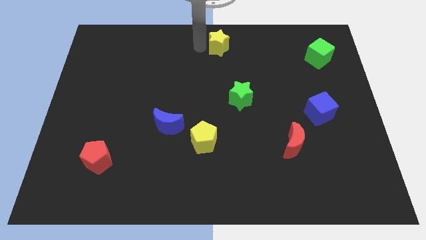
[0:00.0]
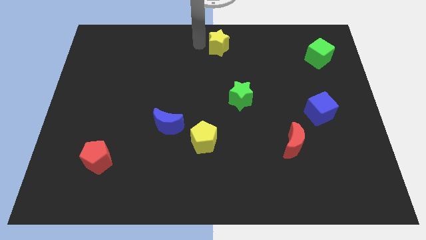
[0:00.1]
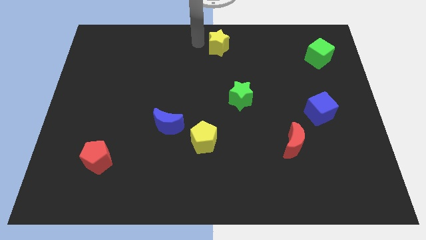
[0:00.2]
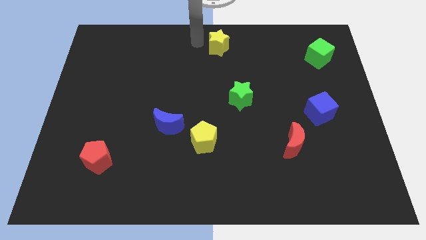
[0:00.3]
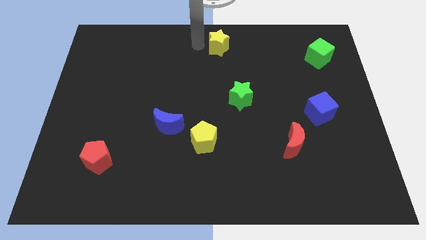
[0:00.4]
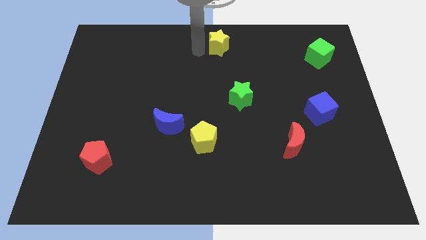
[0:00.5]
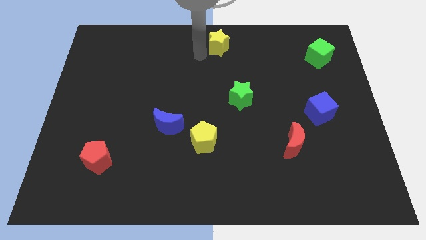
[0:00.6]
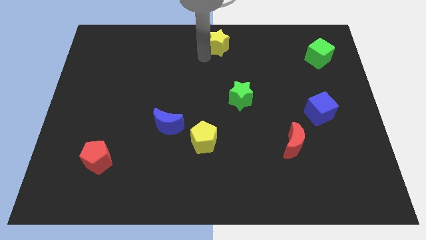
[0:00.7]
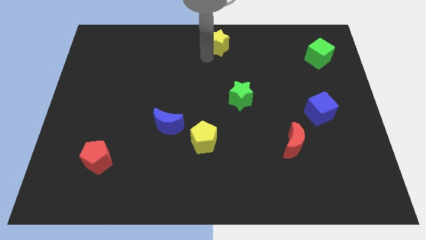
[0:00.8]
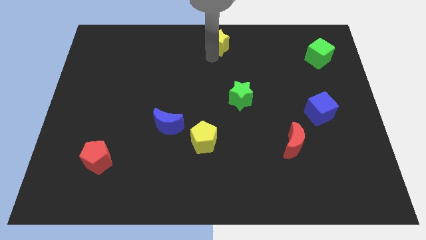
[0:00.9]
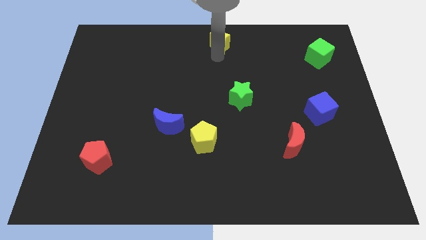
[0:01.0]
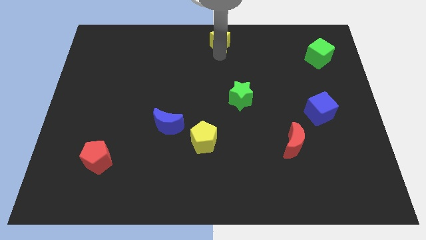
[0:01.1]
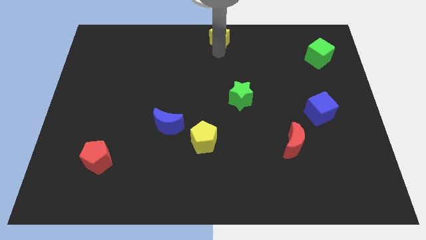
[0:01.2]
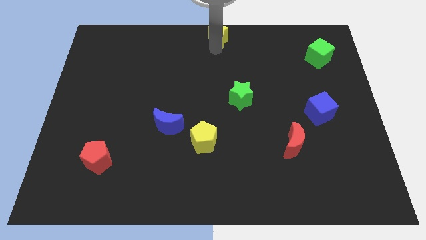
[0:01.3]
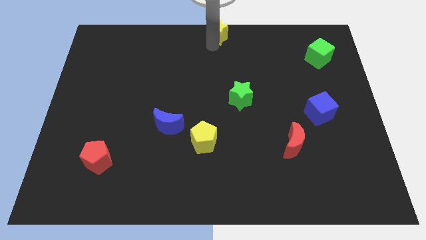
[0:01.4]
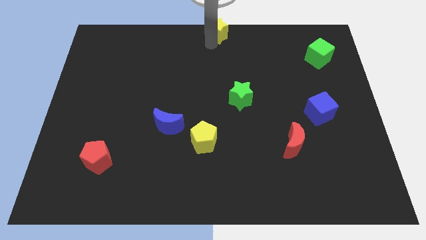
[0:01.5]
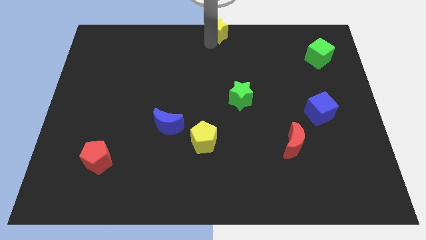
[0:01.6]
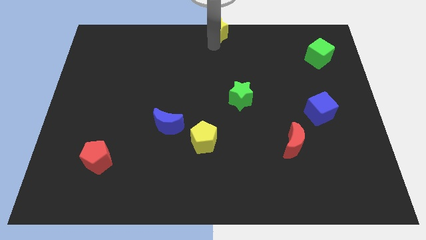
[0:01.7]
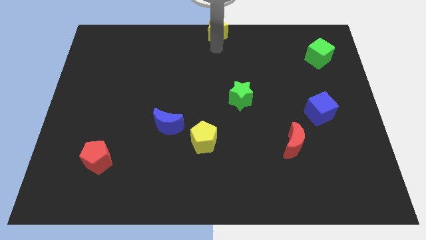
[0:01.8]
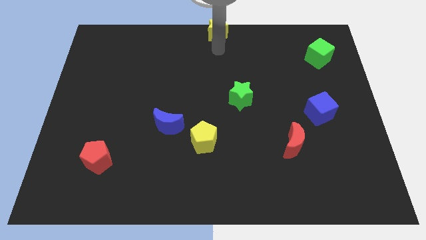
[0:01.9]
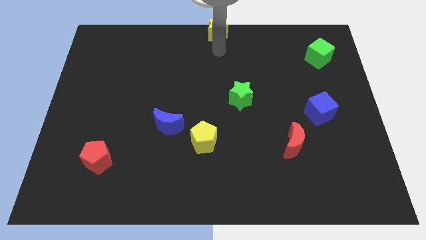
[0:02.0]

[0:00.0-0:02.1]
place the yellow star at the top center of the board

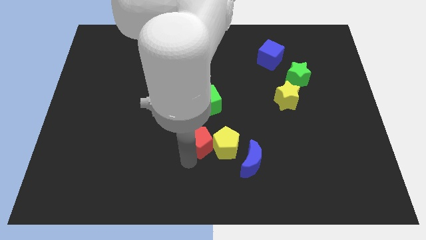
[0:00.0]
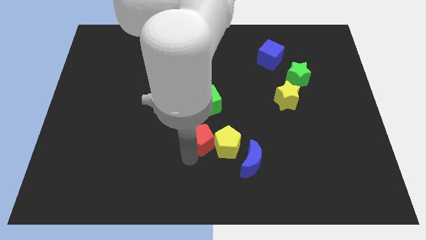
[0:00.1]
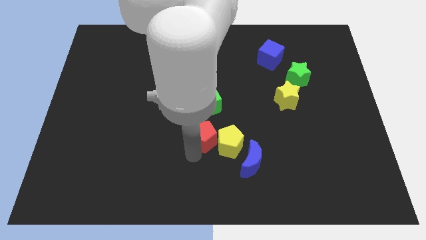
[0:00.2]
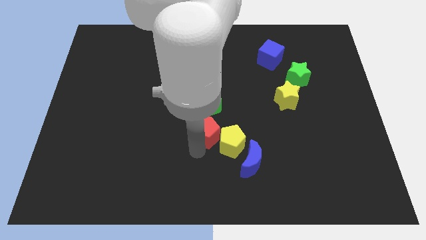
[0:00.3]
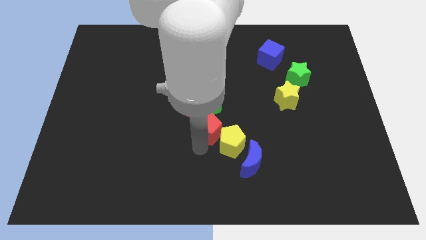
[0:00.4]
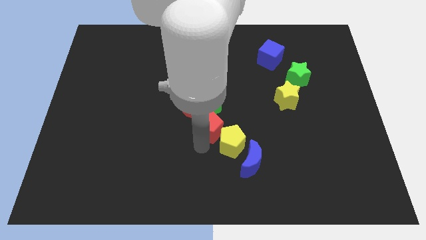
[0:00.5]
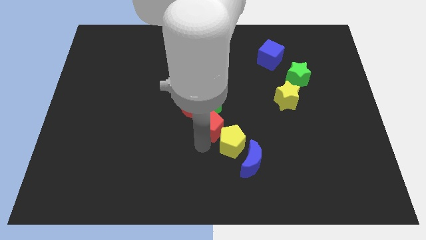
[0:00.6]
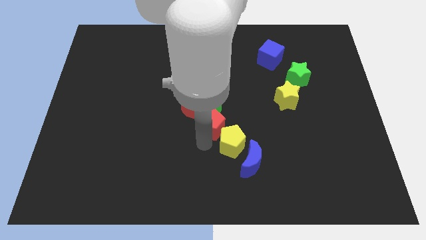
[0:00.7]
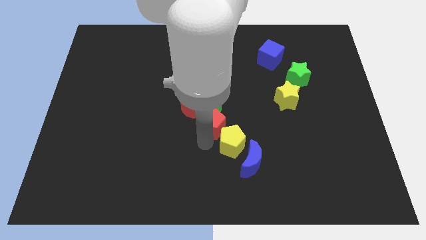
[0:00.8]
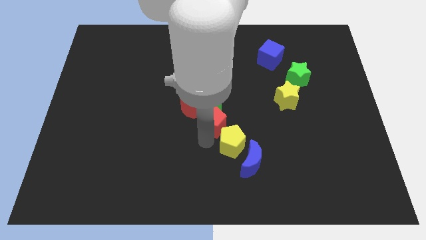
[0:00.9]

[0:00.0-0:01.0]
move the red pentagon below the green cube

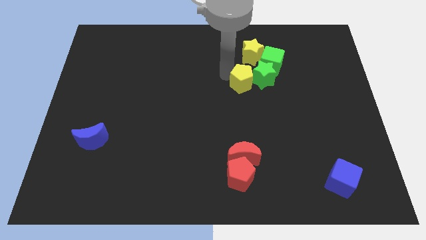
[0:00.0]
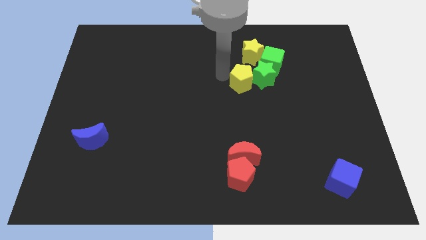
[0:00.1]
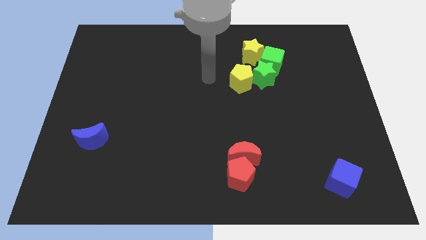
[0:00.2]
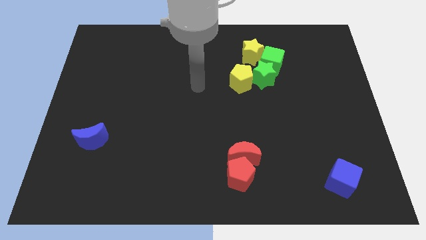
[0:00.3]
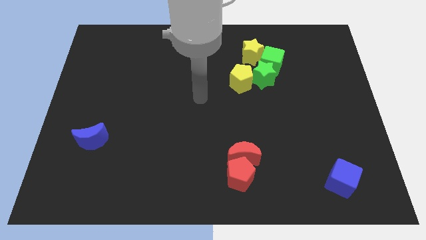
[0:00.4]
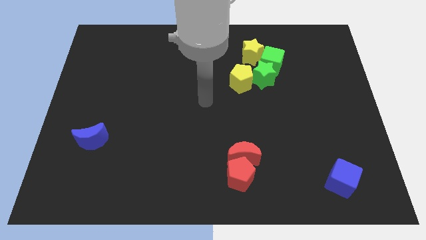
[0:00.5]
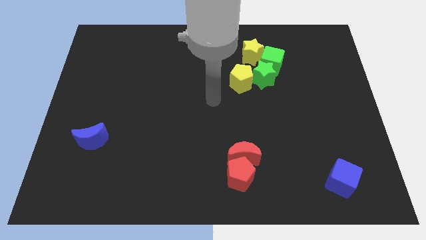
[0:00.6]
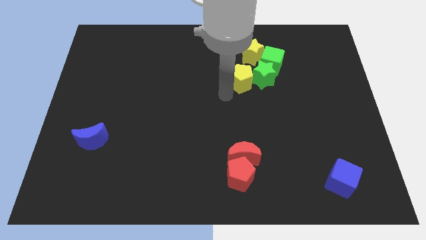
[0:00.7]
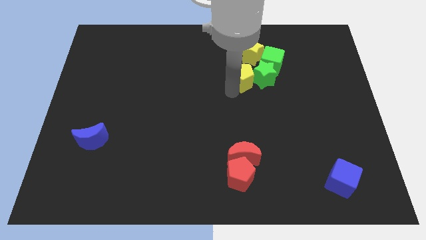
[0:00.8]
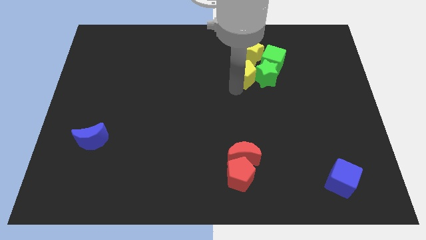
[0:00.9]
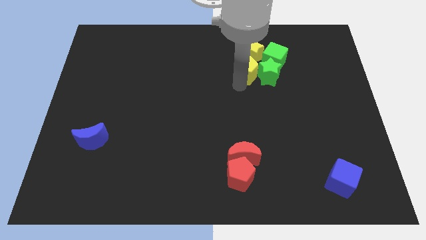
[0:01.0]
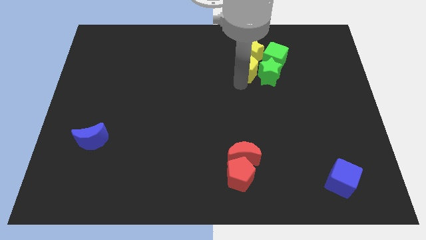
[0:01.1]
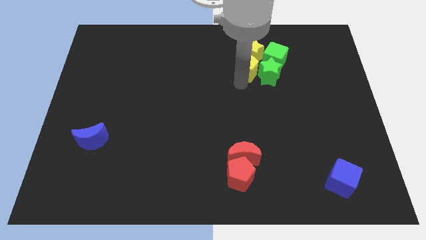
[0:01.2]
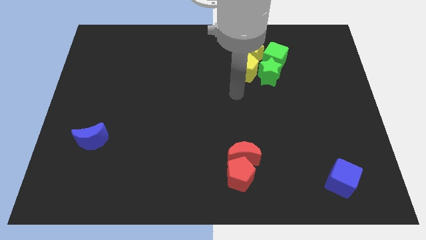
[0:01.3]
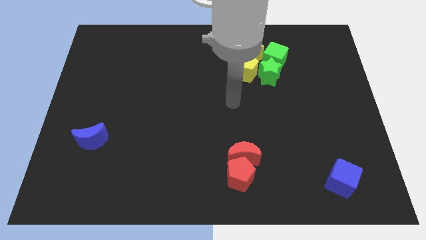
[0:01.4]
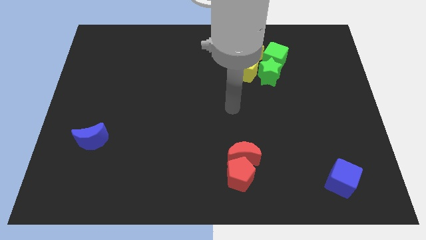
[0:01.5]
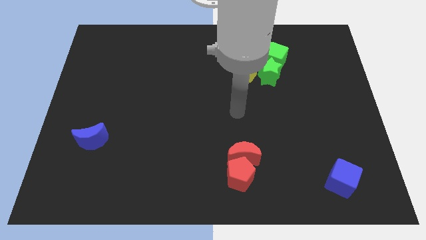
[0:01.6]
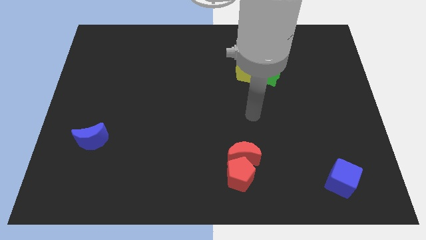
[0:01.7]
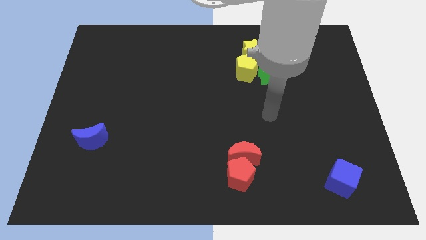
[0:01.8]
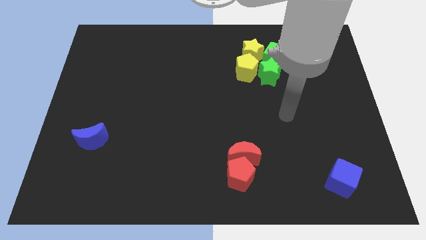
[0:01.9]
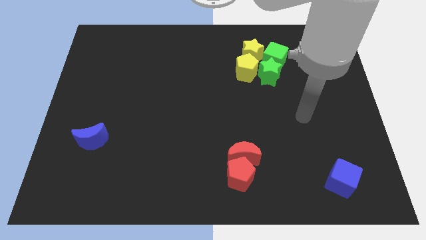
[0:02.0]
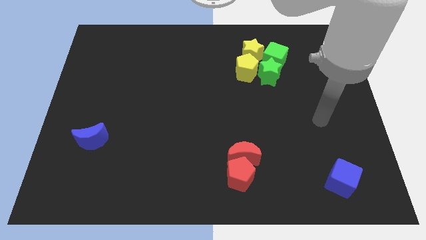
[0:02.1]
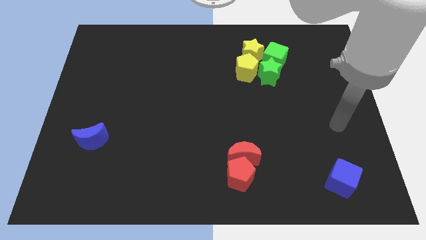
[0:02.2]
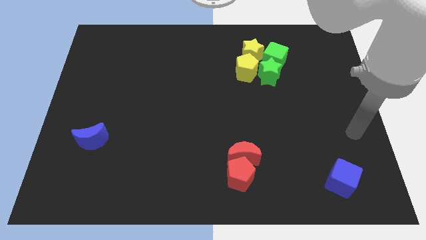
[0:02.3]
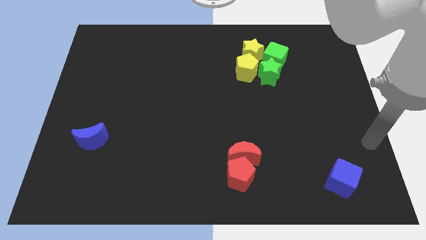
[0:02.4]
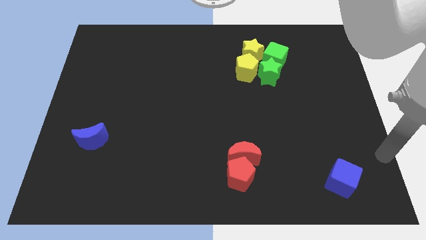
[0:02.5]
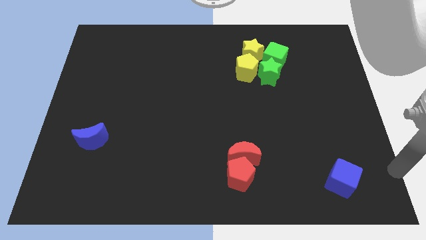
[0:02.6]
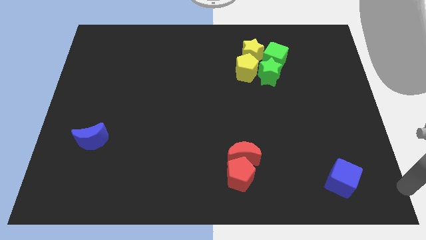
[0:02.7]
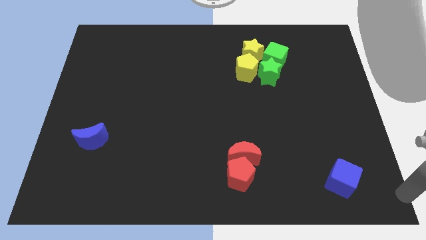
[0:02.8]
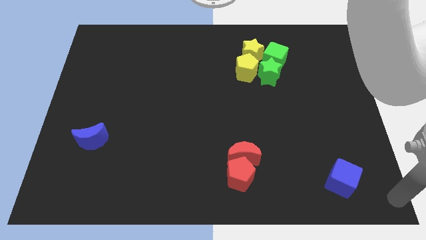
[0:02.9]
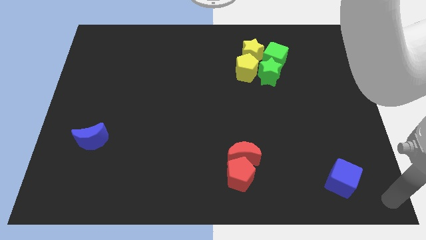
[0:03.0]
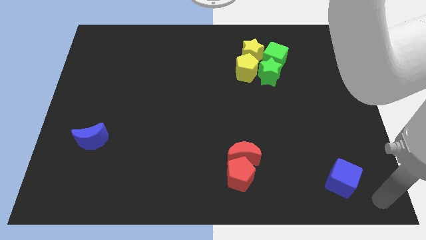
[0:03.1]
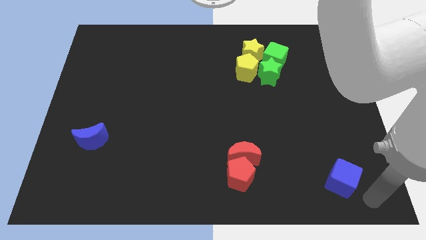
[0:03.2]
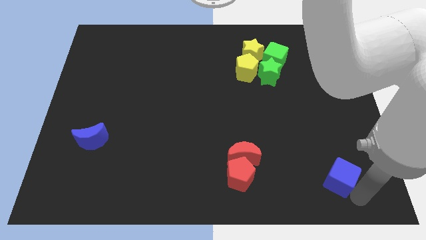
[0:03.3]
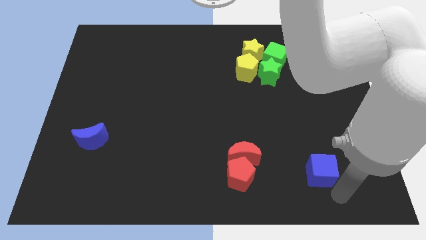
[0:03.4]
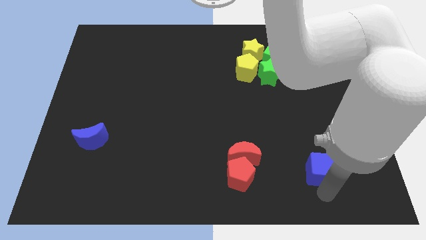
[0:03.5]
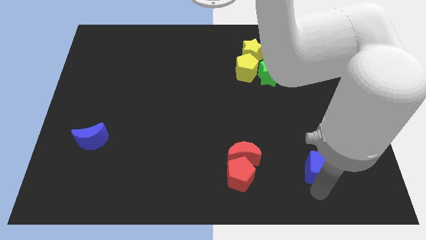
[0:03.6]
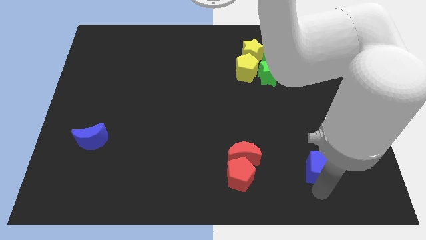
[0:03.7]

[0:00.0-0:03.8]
move your arm to the blue cube

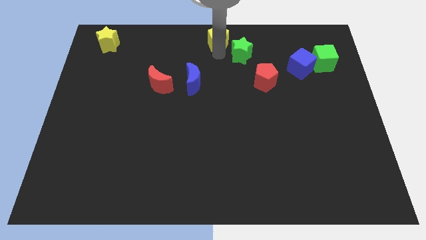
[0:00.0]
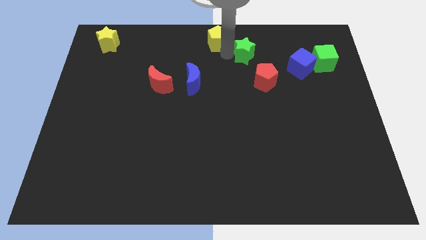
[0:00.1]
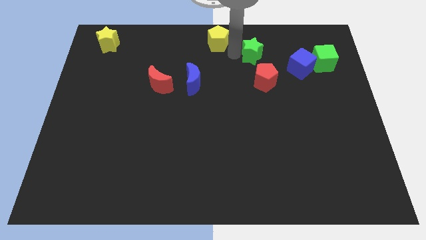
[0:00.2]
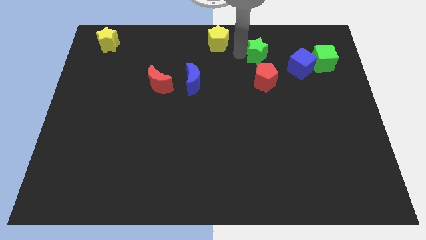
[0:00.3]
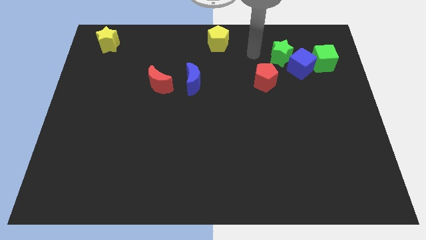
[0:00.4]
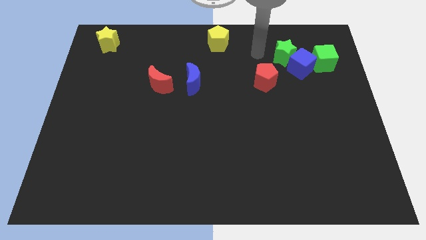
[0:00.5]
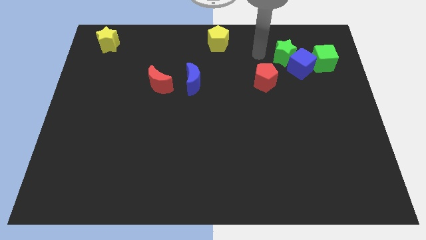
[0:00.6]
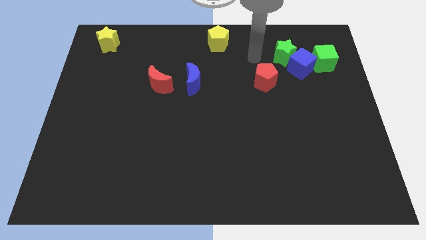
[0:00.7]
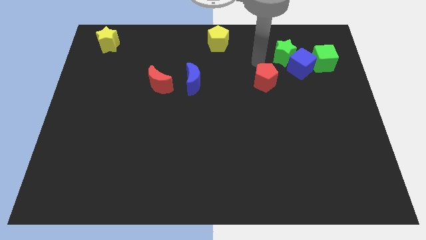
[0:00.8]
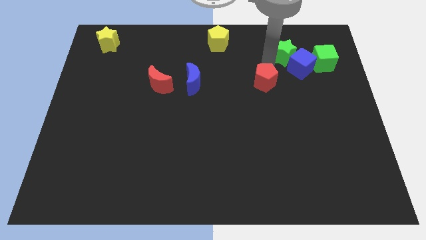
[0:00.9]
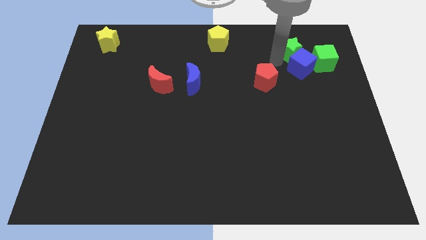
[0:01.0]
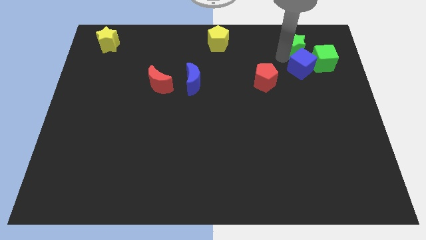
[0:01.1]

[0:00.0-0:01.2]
separate the green star from the yellow pentagon

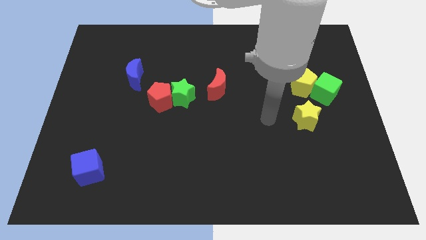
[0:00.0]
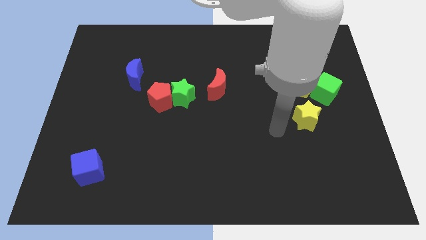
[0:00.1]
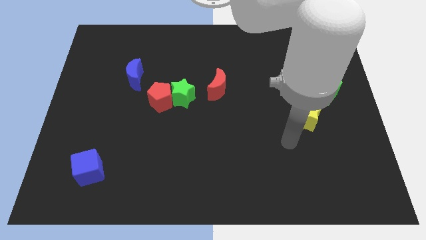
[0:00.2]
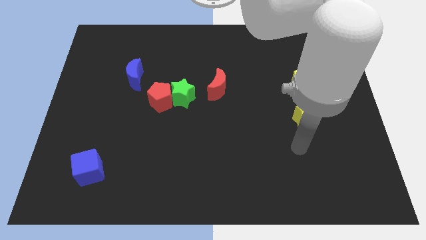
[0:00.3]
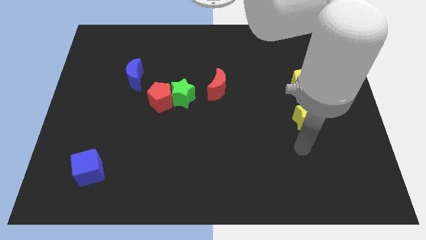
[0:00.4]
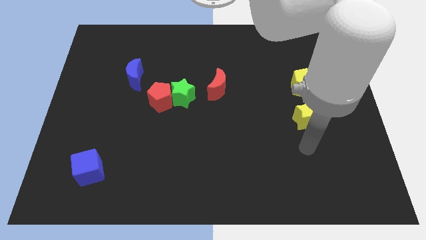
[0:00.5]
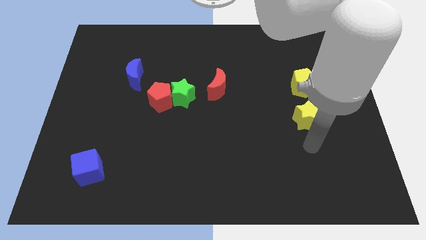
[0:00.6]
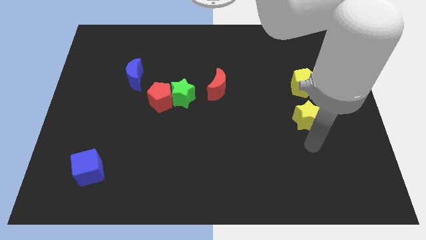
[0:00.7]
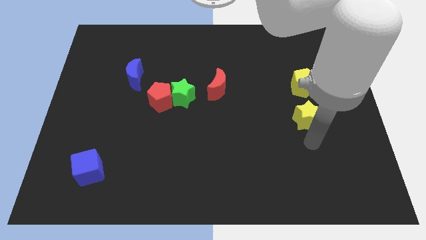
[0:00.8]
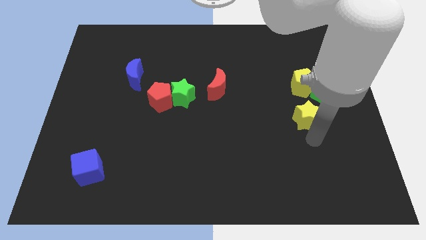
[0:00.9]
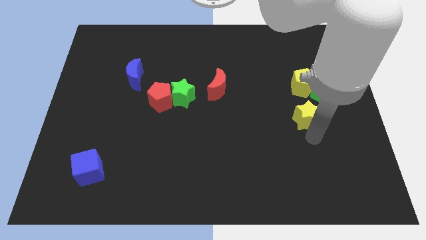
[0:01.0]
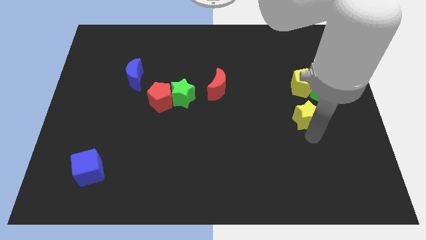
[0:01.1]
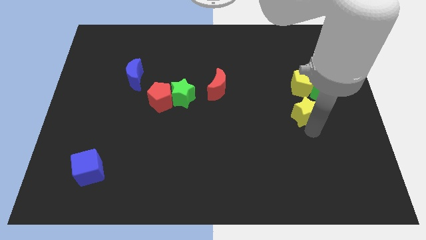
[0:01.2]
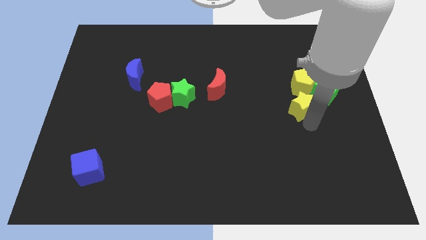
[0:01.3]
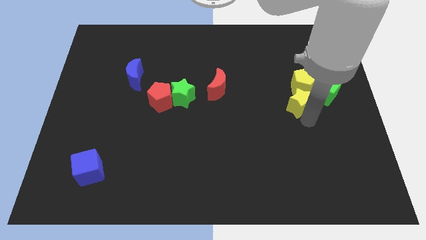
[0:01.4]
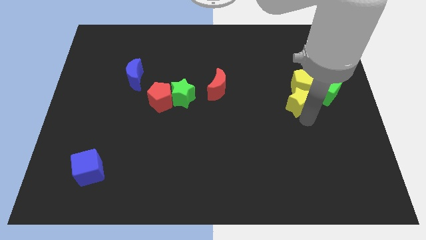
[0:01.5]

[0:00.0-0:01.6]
push the yellow star towards the yellow pentagon
